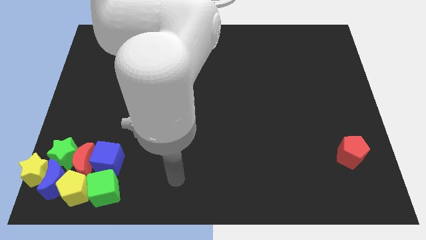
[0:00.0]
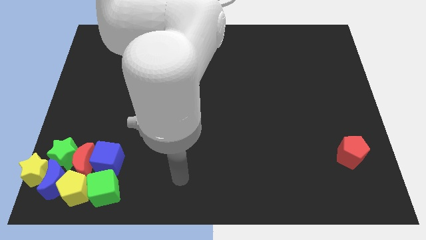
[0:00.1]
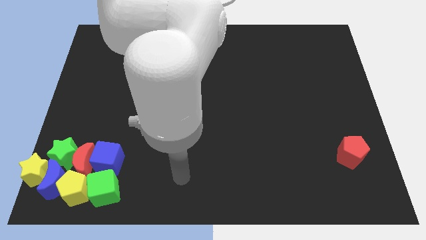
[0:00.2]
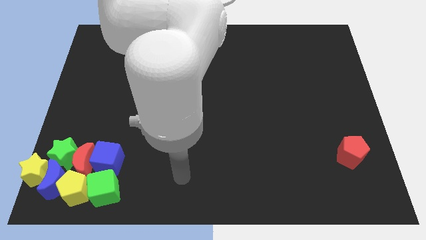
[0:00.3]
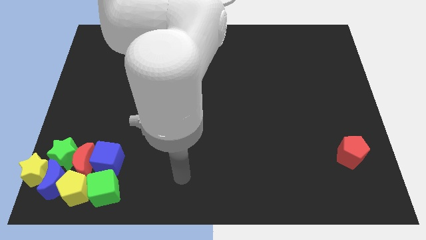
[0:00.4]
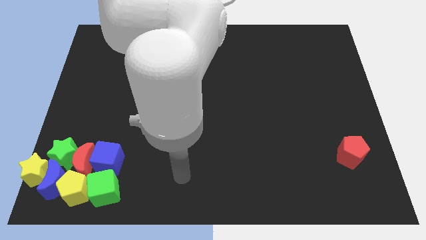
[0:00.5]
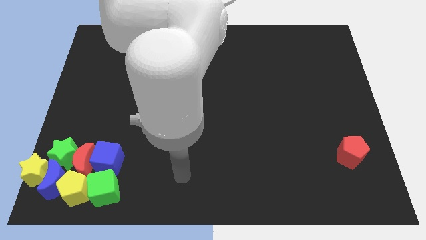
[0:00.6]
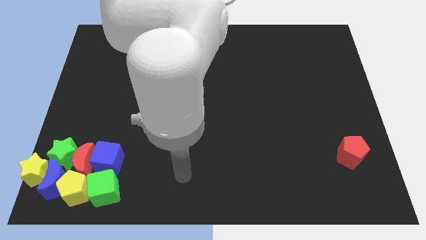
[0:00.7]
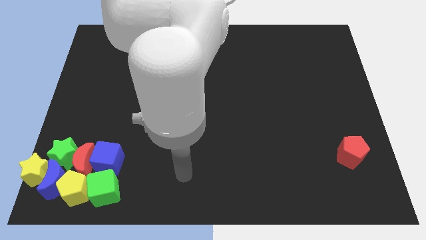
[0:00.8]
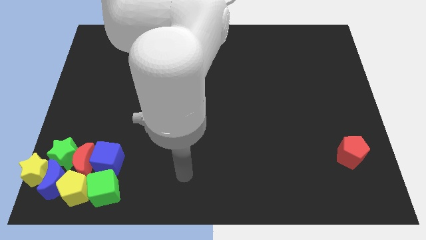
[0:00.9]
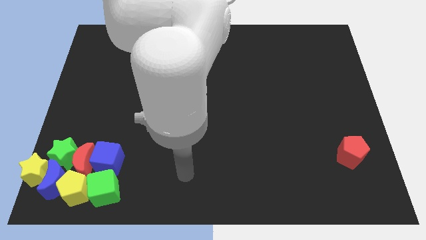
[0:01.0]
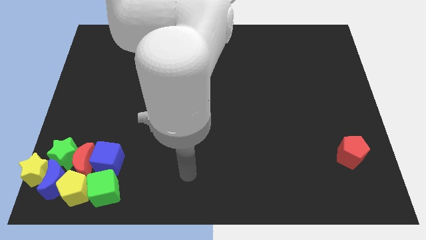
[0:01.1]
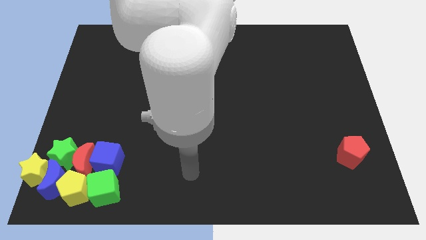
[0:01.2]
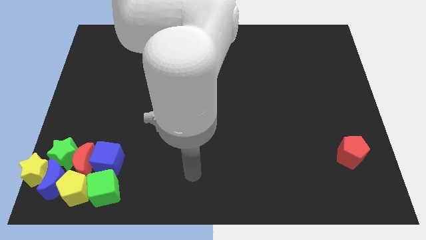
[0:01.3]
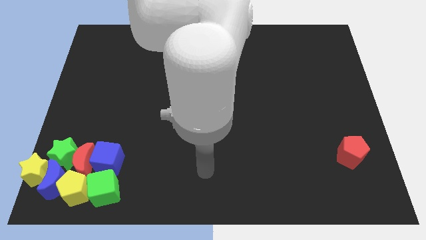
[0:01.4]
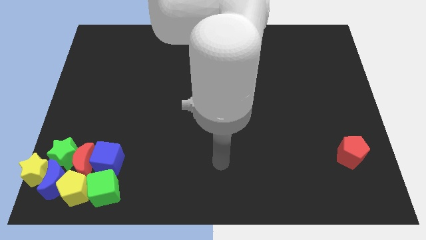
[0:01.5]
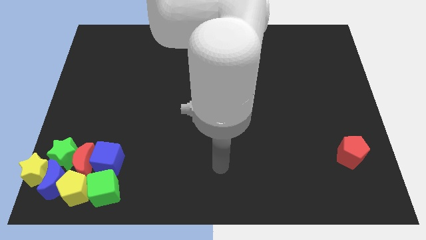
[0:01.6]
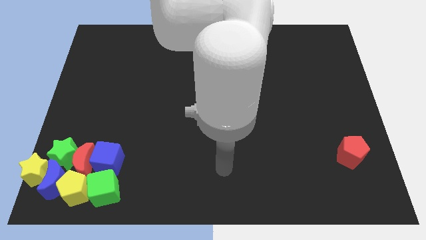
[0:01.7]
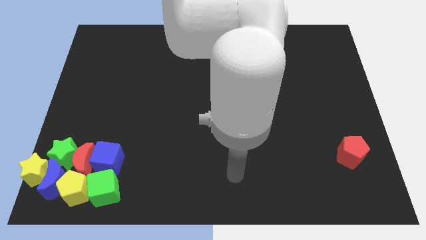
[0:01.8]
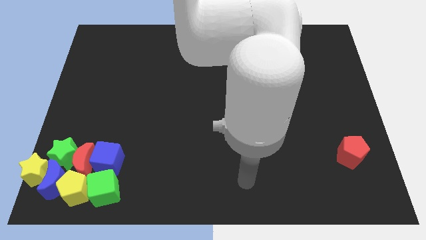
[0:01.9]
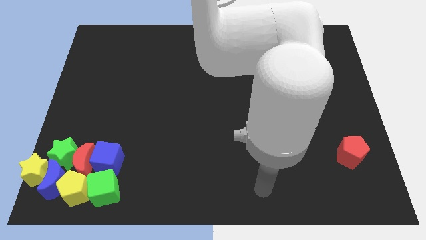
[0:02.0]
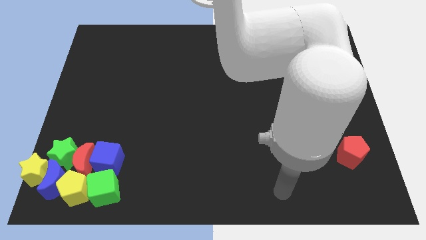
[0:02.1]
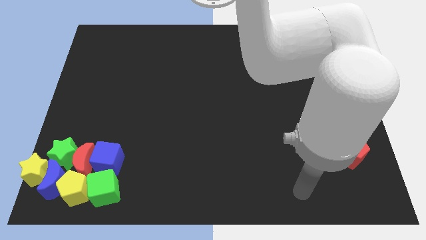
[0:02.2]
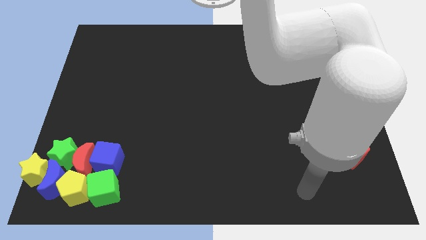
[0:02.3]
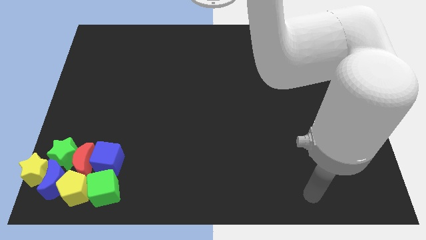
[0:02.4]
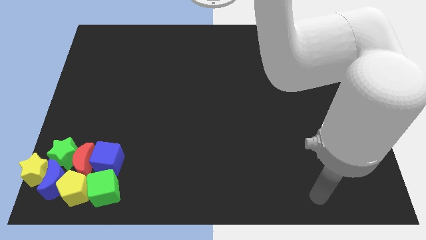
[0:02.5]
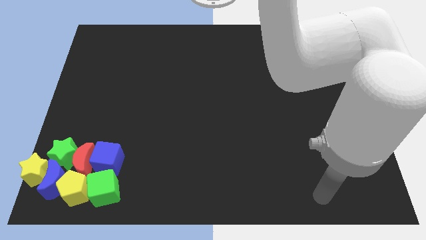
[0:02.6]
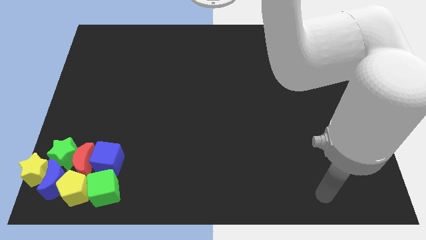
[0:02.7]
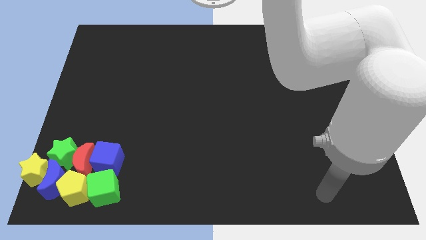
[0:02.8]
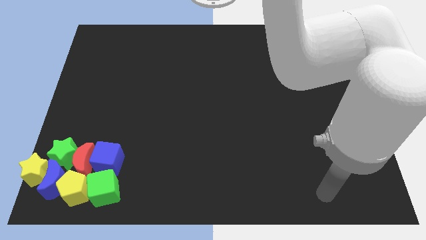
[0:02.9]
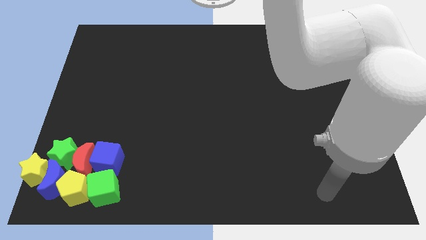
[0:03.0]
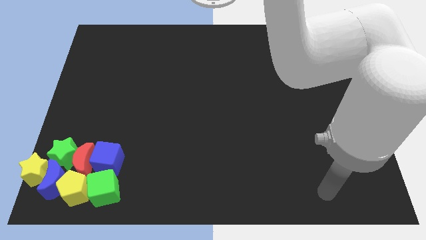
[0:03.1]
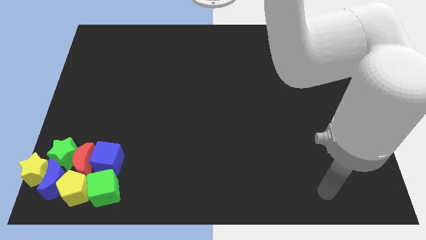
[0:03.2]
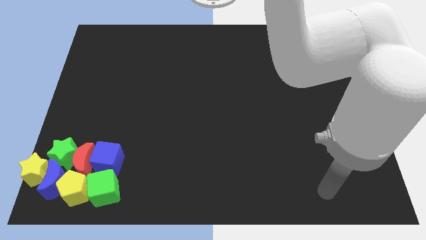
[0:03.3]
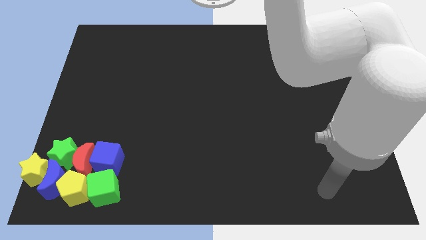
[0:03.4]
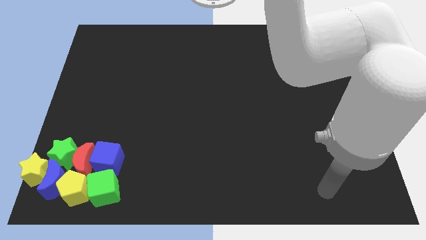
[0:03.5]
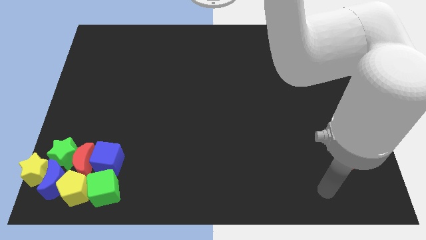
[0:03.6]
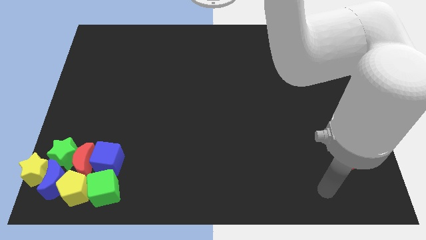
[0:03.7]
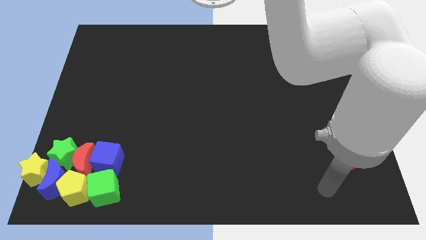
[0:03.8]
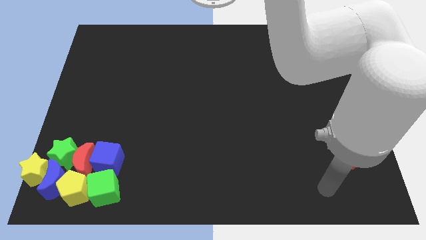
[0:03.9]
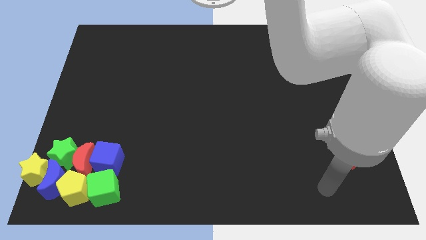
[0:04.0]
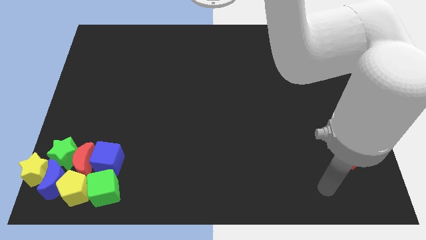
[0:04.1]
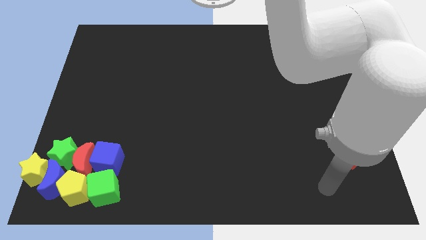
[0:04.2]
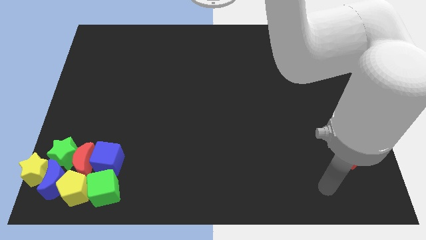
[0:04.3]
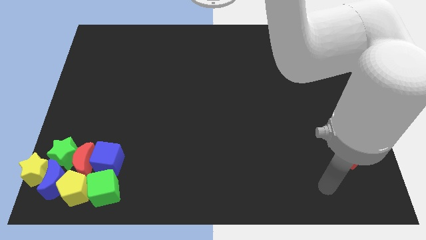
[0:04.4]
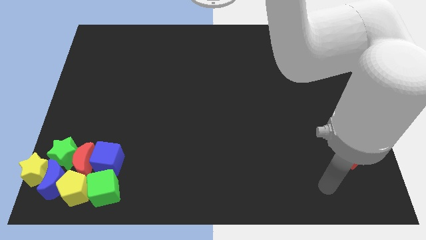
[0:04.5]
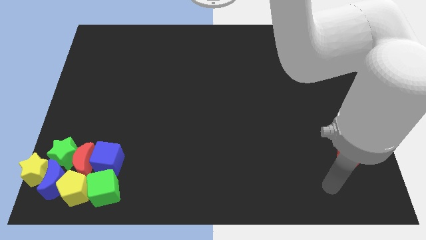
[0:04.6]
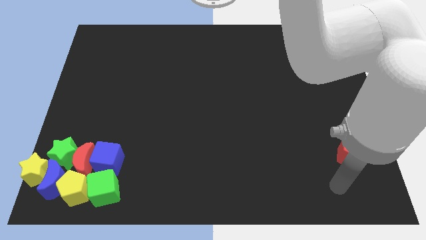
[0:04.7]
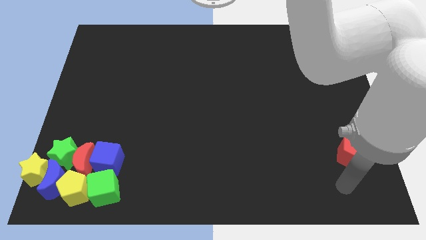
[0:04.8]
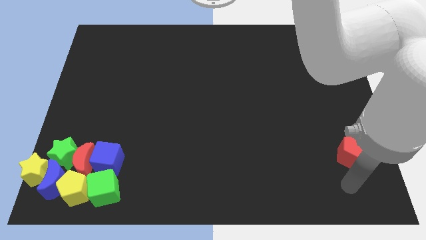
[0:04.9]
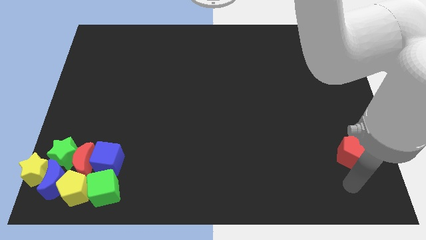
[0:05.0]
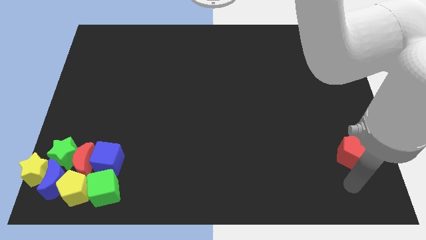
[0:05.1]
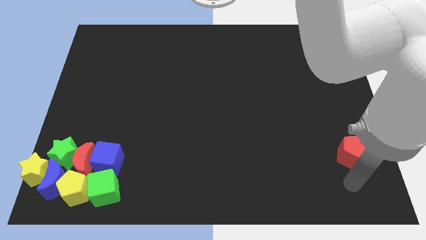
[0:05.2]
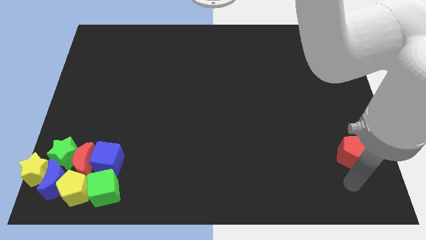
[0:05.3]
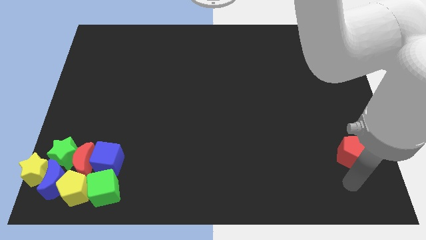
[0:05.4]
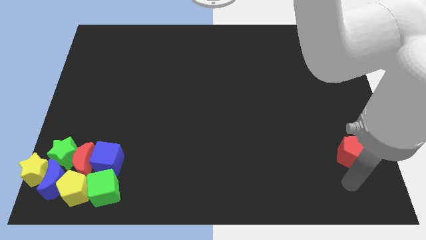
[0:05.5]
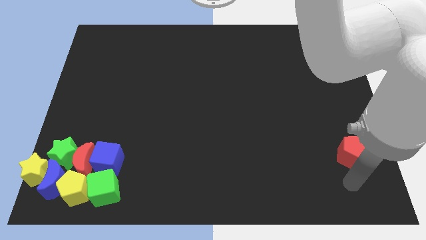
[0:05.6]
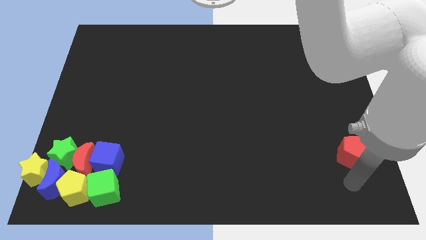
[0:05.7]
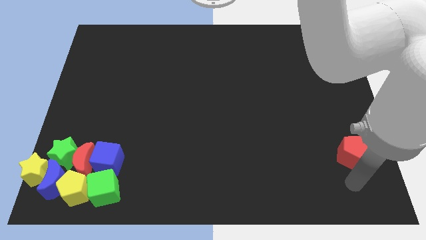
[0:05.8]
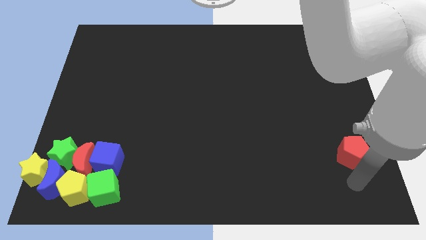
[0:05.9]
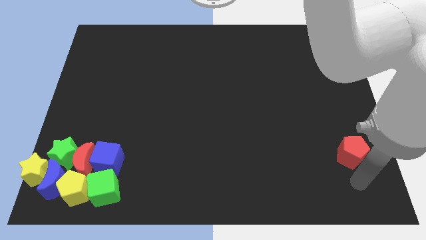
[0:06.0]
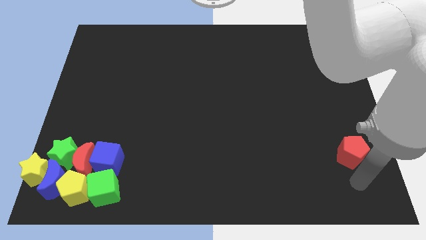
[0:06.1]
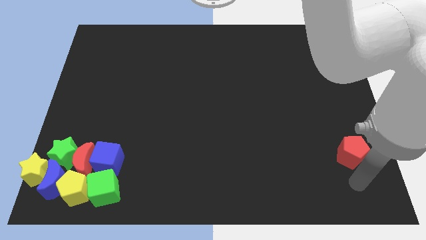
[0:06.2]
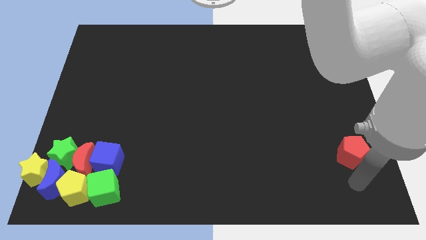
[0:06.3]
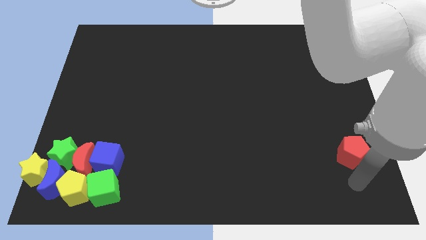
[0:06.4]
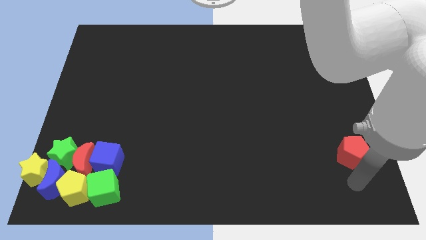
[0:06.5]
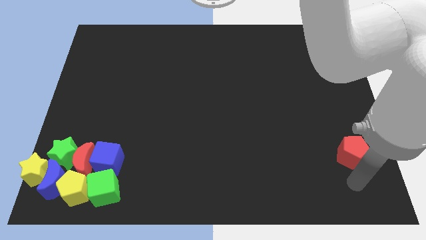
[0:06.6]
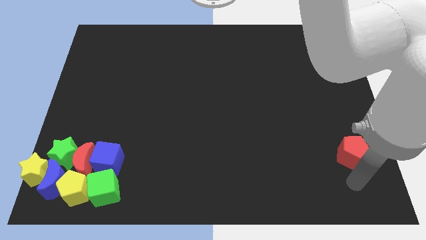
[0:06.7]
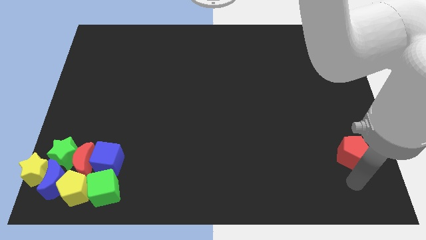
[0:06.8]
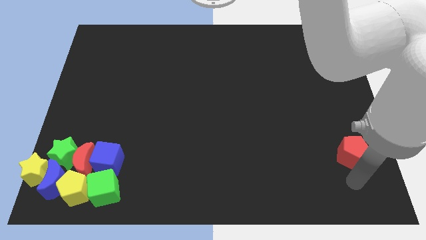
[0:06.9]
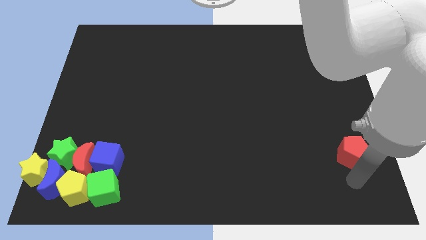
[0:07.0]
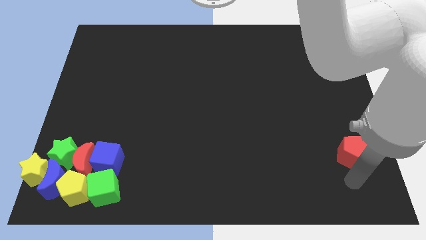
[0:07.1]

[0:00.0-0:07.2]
move the arm towards the red pentagon

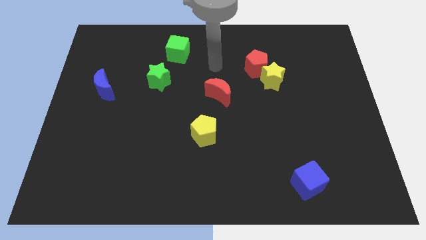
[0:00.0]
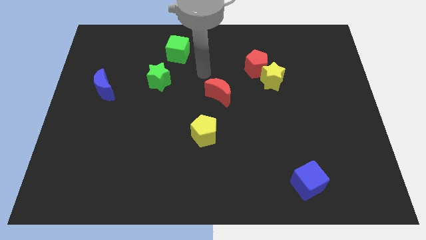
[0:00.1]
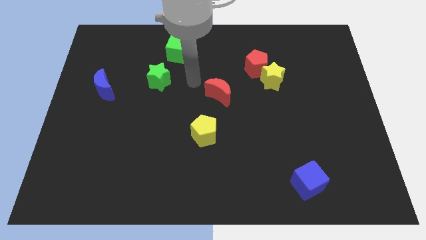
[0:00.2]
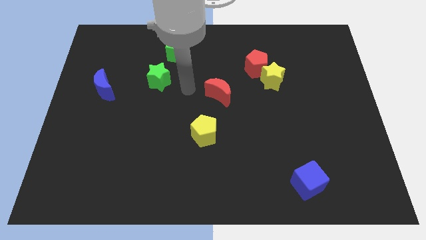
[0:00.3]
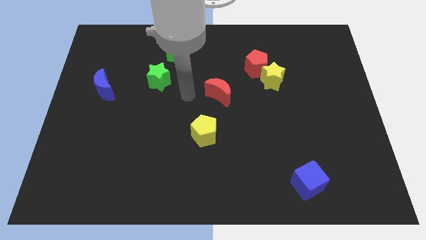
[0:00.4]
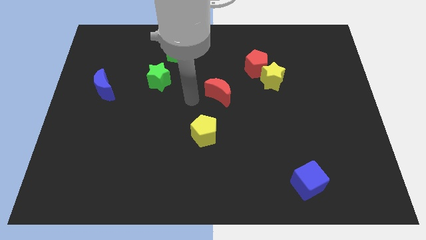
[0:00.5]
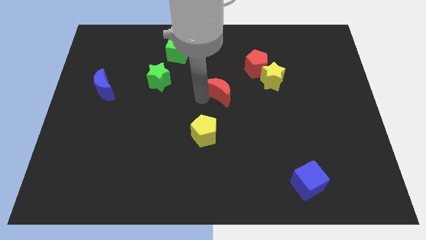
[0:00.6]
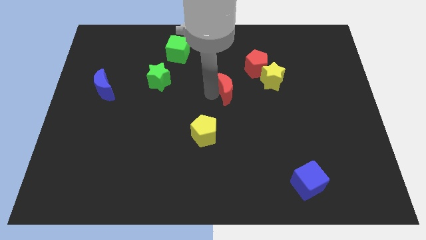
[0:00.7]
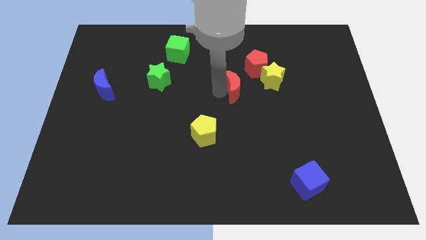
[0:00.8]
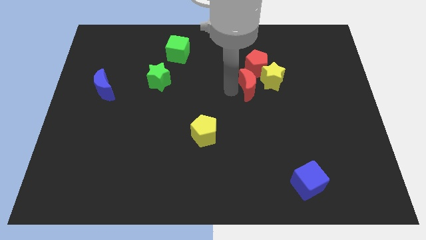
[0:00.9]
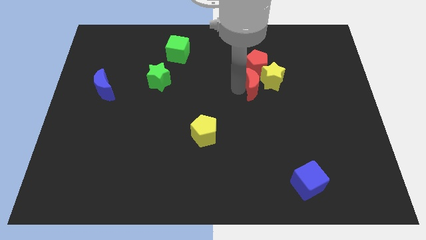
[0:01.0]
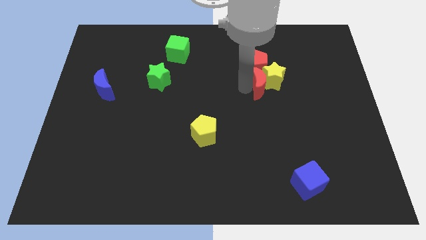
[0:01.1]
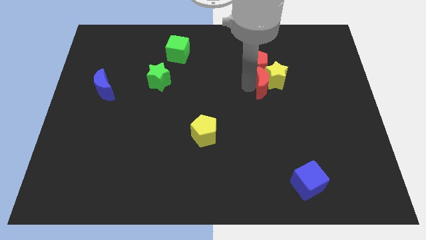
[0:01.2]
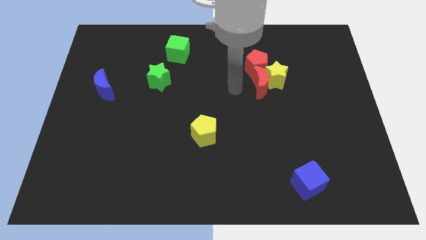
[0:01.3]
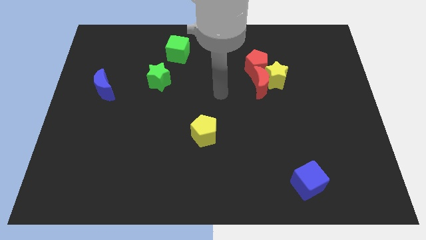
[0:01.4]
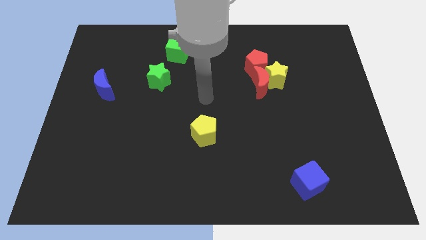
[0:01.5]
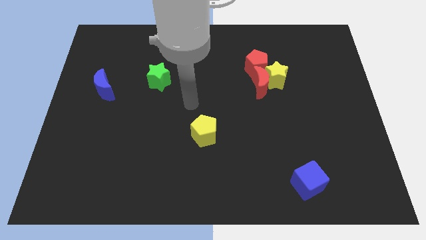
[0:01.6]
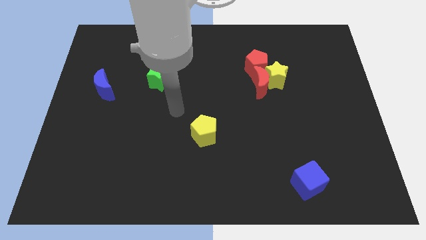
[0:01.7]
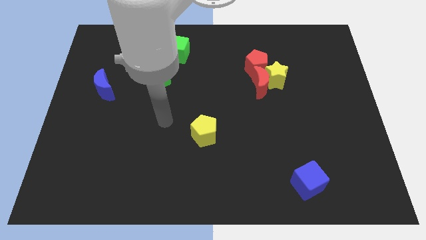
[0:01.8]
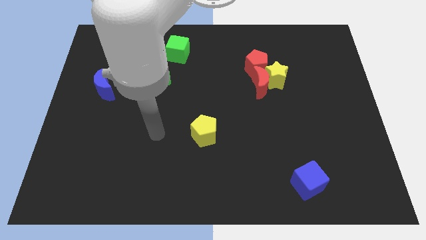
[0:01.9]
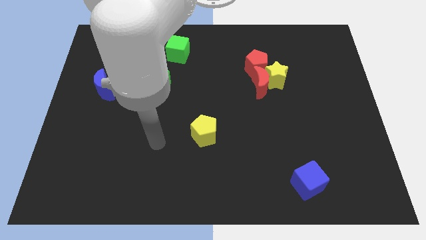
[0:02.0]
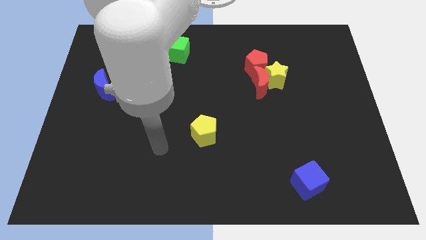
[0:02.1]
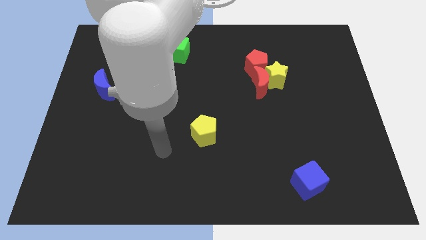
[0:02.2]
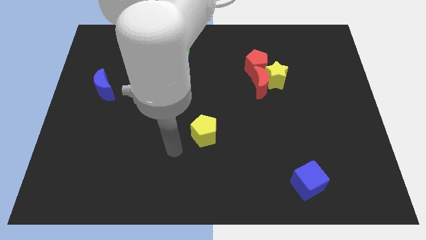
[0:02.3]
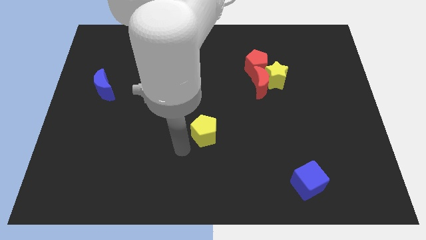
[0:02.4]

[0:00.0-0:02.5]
move the red crescent into the yellow star
